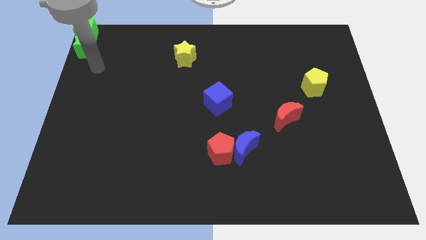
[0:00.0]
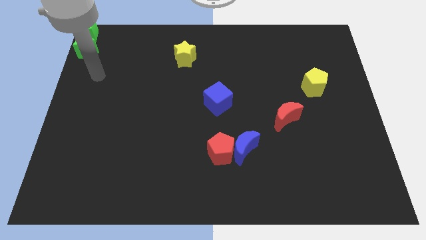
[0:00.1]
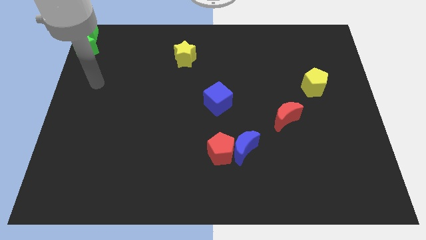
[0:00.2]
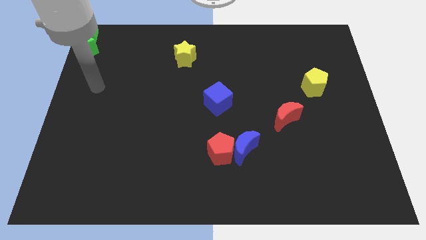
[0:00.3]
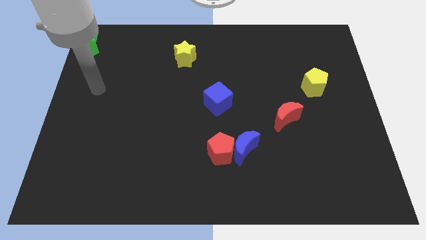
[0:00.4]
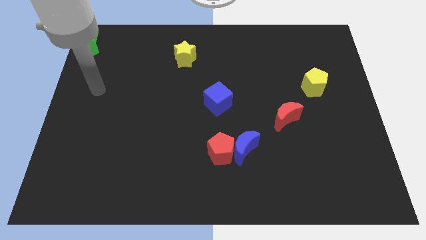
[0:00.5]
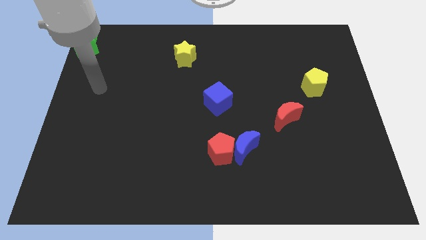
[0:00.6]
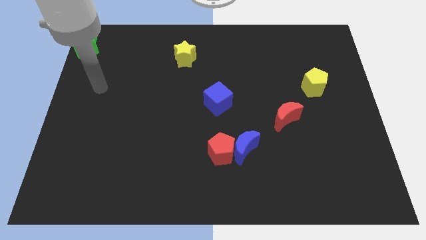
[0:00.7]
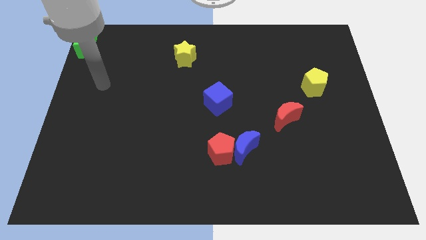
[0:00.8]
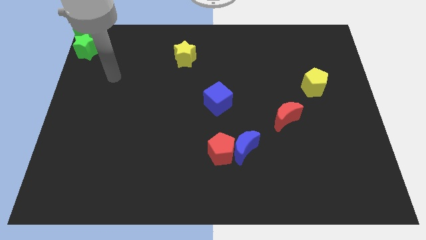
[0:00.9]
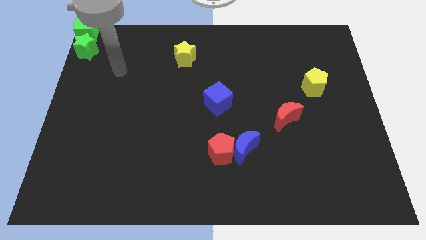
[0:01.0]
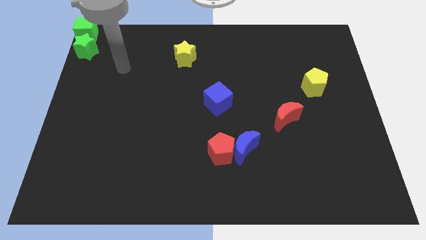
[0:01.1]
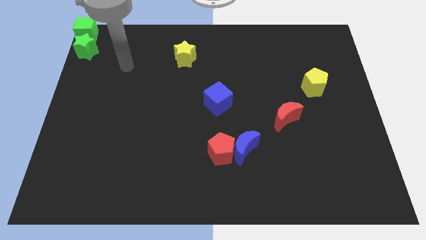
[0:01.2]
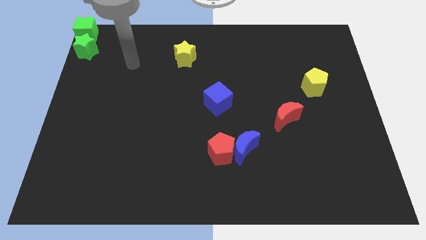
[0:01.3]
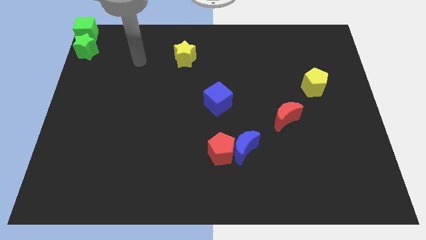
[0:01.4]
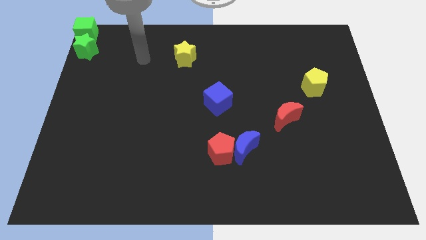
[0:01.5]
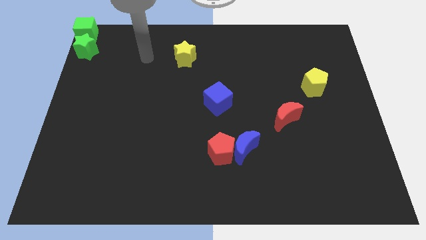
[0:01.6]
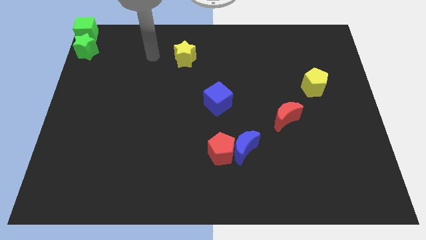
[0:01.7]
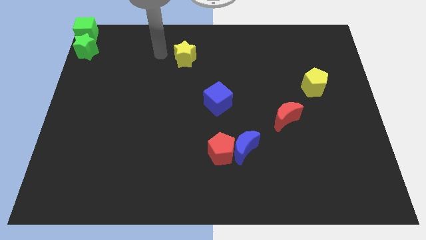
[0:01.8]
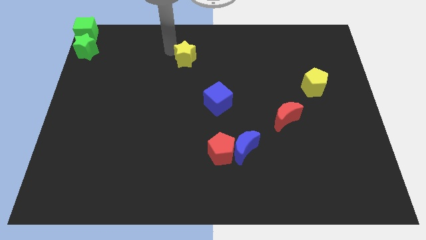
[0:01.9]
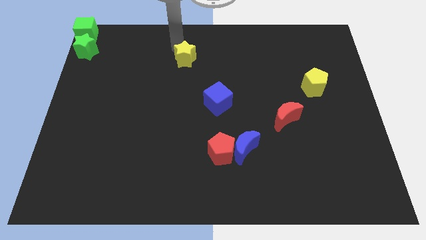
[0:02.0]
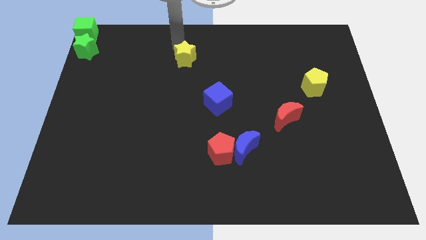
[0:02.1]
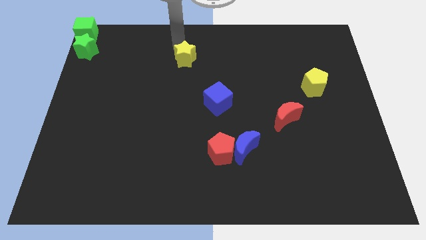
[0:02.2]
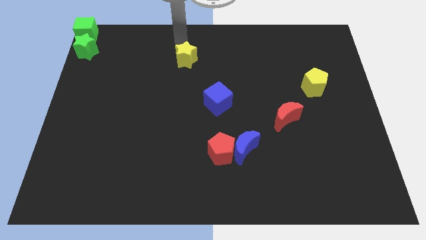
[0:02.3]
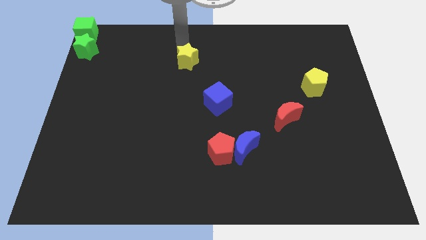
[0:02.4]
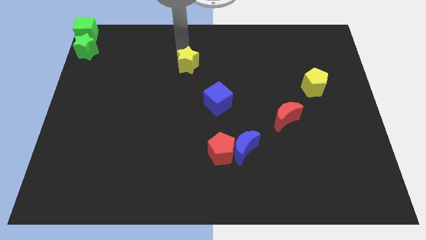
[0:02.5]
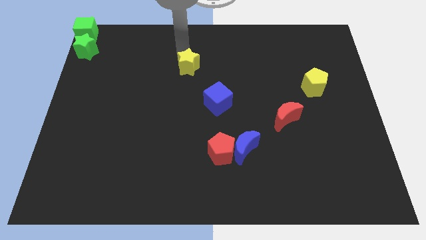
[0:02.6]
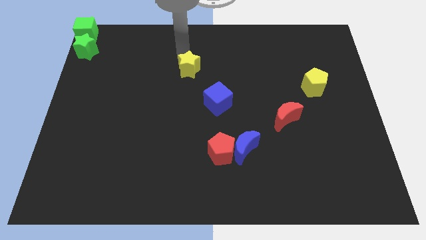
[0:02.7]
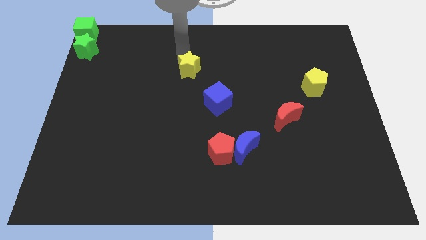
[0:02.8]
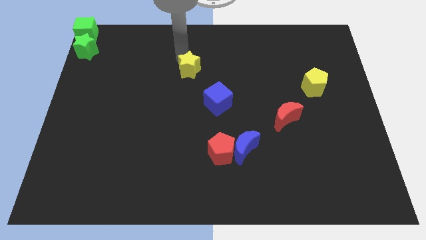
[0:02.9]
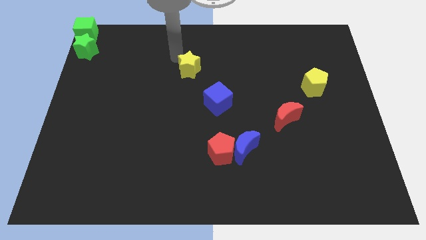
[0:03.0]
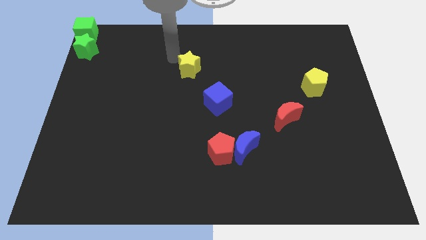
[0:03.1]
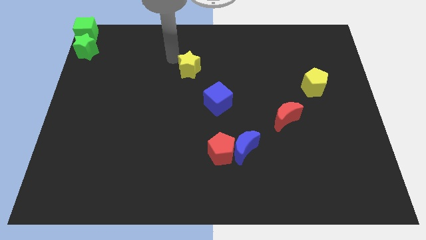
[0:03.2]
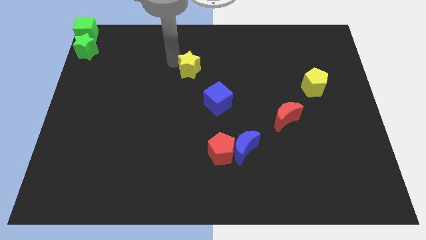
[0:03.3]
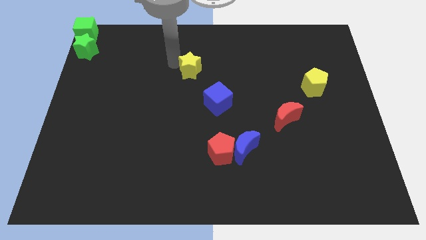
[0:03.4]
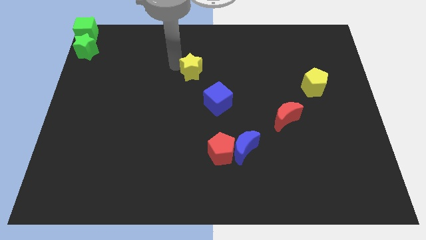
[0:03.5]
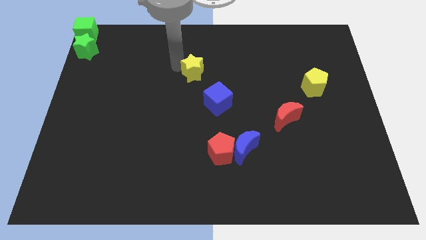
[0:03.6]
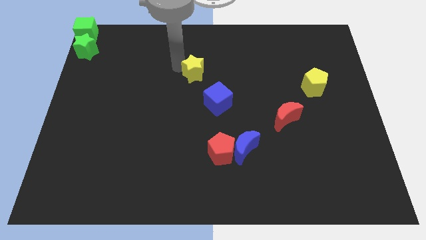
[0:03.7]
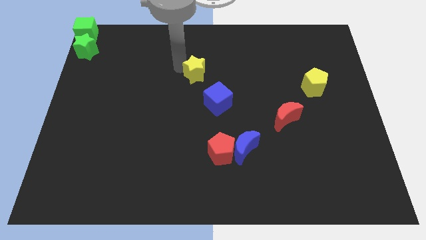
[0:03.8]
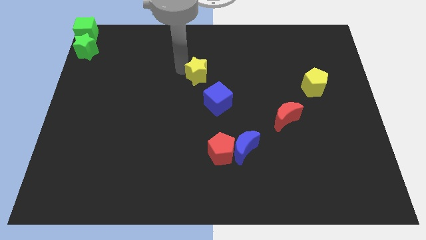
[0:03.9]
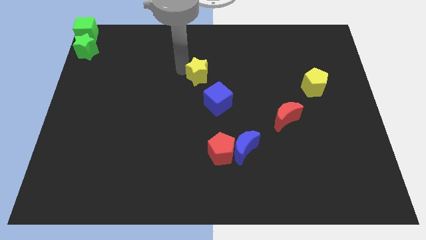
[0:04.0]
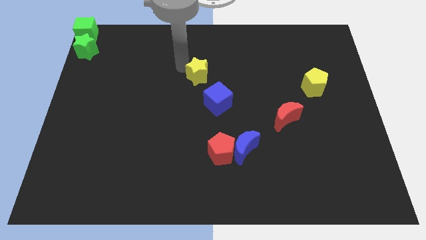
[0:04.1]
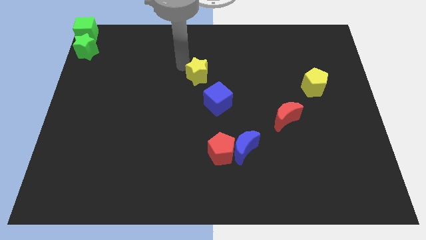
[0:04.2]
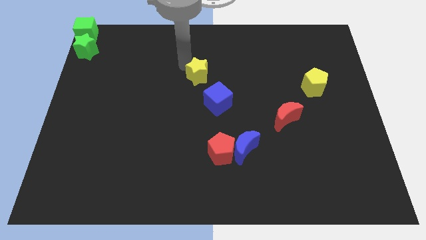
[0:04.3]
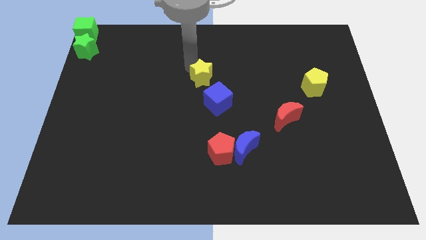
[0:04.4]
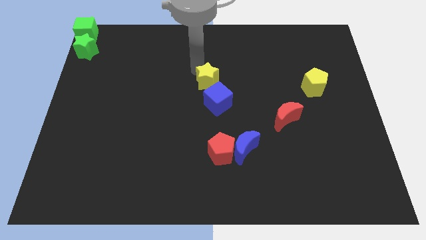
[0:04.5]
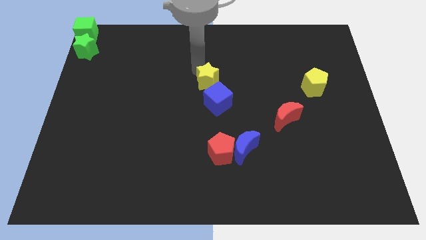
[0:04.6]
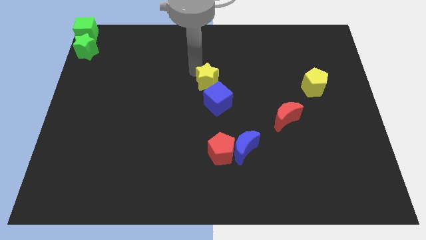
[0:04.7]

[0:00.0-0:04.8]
put the yellow star close to the blue cube

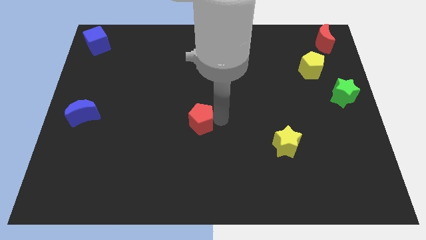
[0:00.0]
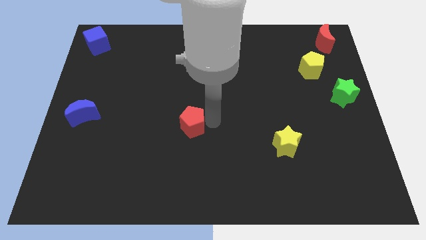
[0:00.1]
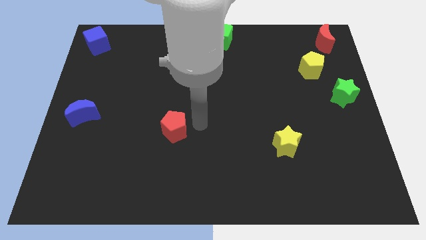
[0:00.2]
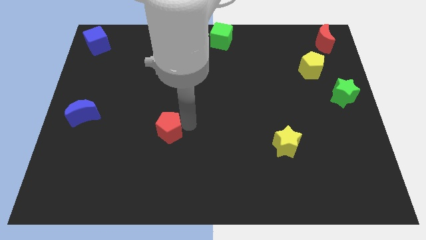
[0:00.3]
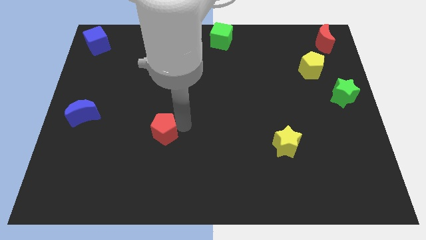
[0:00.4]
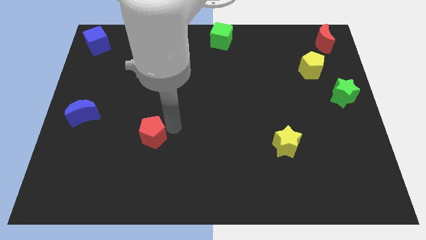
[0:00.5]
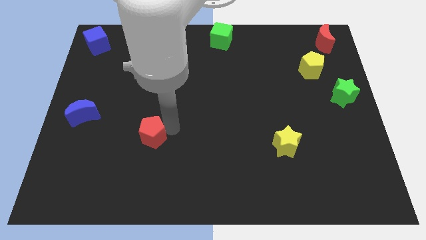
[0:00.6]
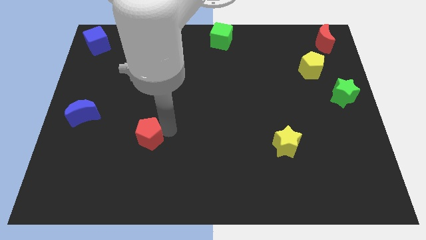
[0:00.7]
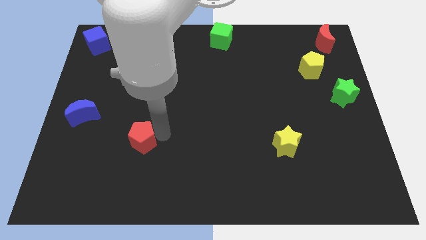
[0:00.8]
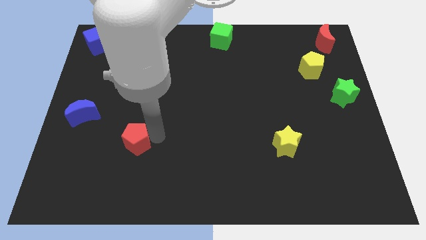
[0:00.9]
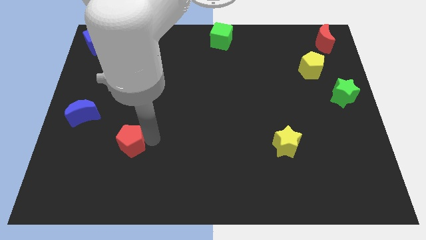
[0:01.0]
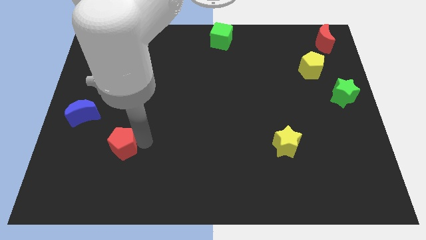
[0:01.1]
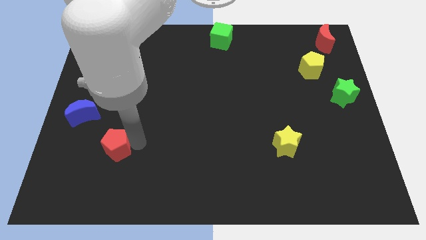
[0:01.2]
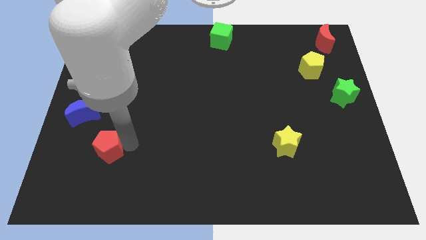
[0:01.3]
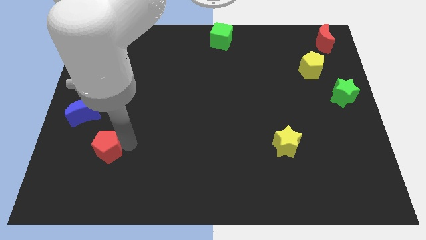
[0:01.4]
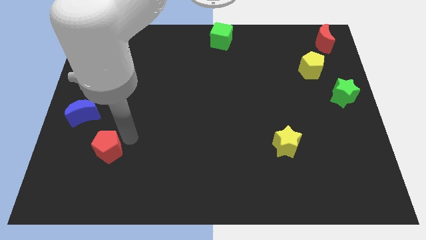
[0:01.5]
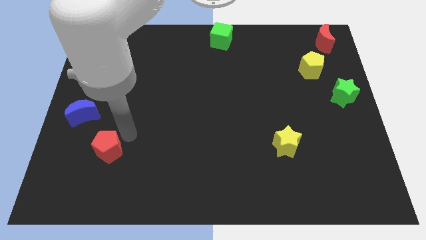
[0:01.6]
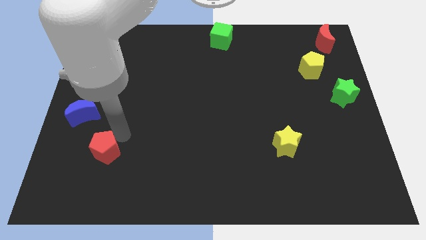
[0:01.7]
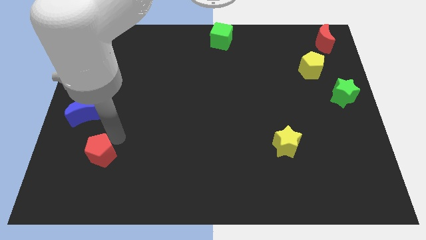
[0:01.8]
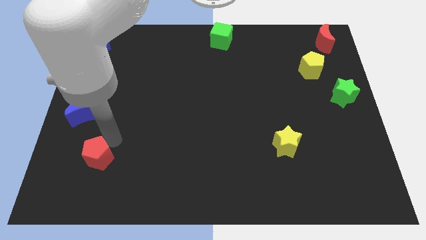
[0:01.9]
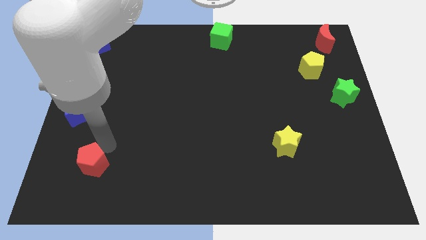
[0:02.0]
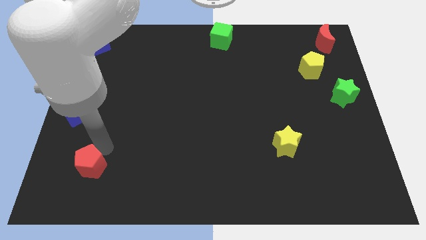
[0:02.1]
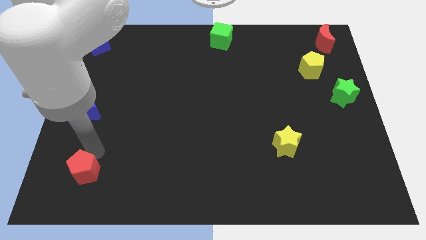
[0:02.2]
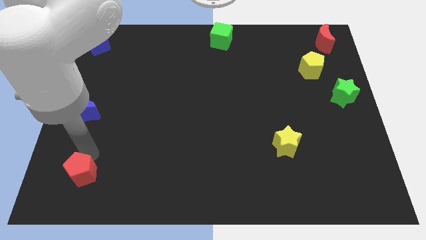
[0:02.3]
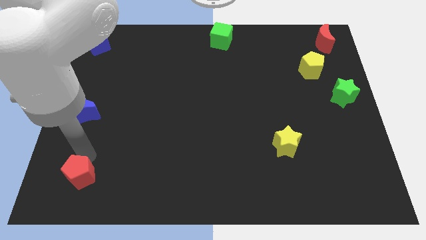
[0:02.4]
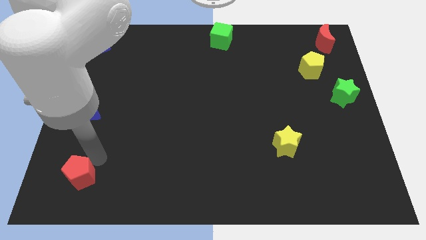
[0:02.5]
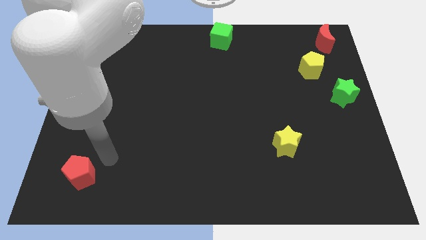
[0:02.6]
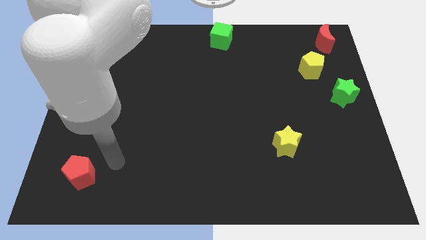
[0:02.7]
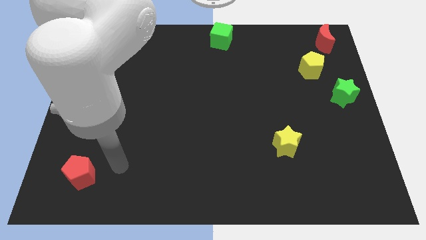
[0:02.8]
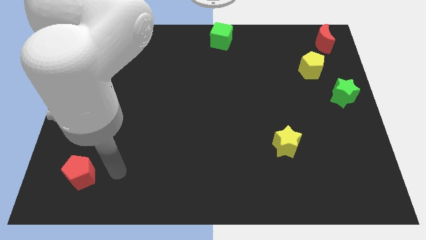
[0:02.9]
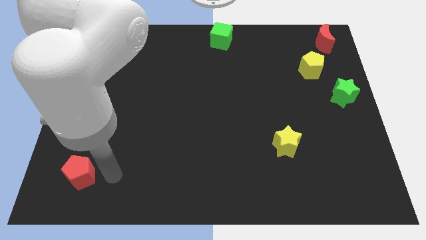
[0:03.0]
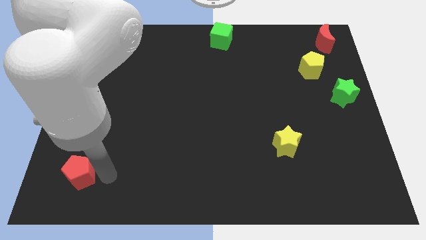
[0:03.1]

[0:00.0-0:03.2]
move the red pentagon towards the bottom left

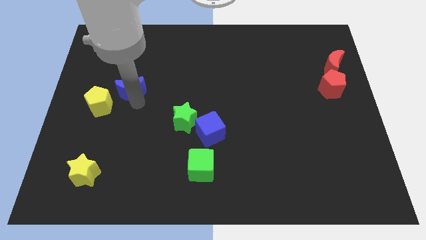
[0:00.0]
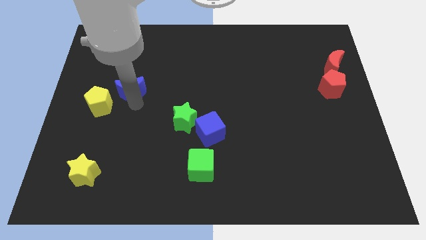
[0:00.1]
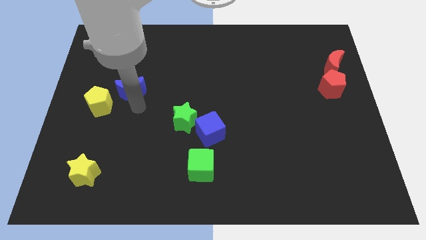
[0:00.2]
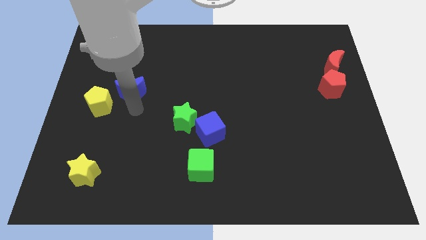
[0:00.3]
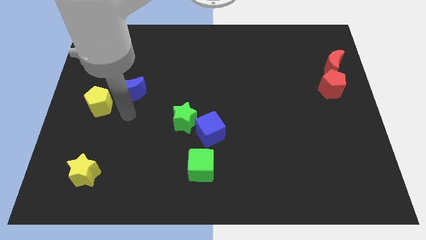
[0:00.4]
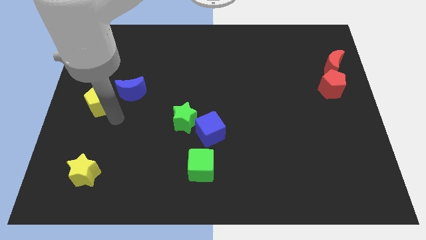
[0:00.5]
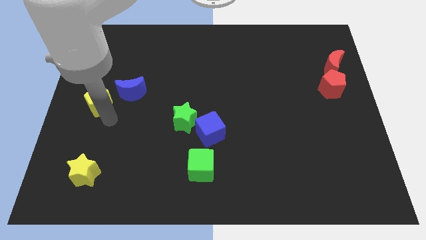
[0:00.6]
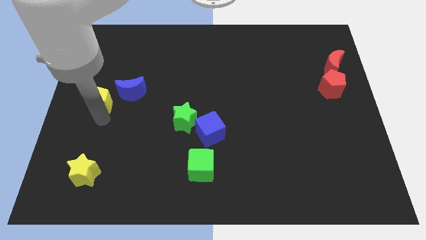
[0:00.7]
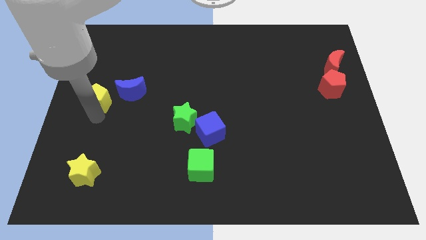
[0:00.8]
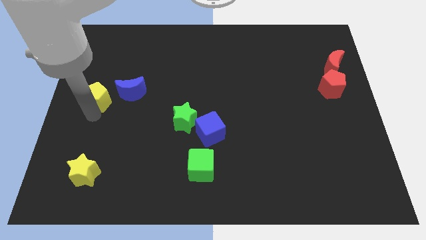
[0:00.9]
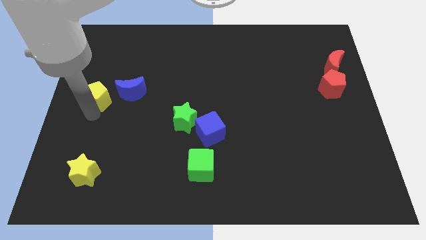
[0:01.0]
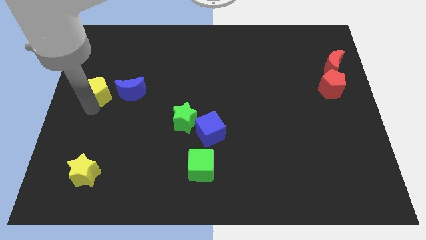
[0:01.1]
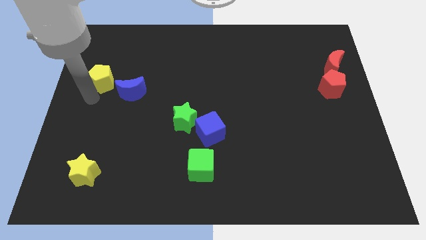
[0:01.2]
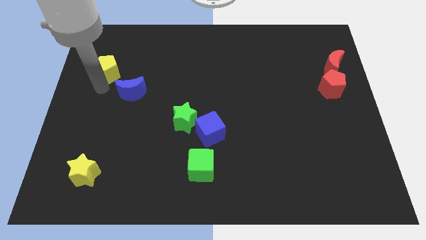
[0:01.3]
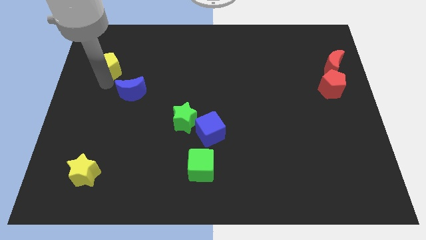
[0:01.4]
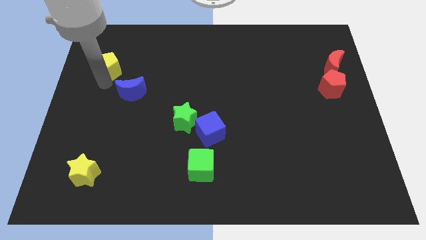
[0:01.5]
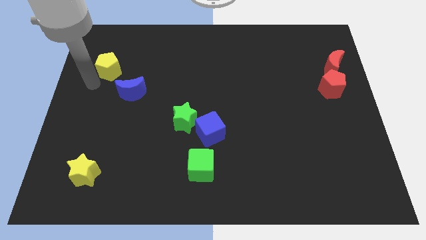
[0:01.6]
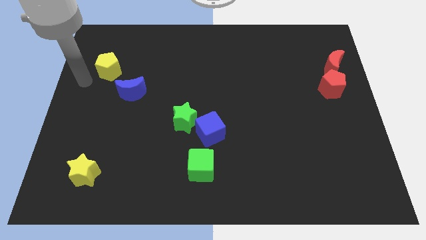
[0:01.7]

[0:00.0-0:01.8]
push yellow pentagon diagonally top left to the blue moon
